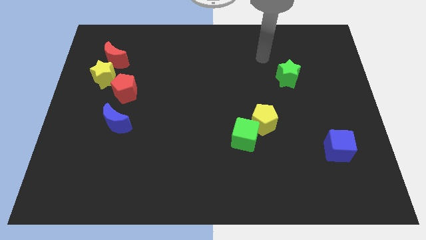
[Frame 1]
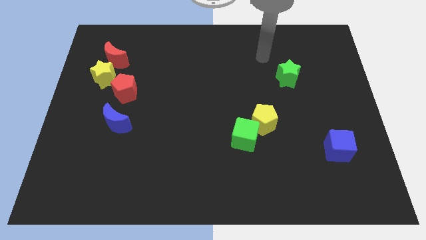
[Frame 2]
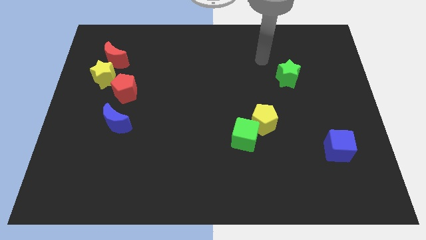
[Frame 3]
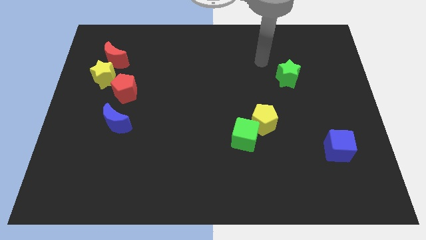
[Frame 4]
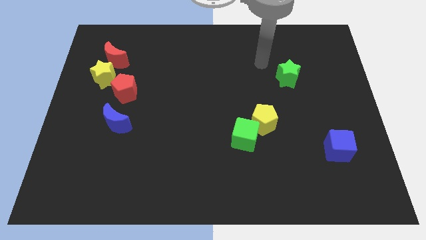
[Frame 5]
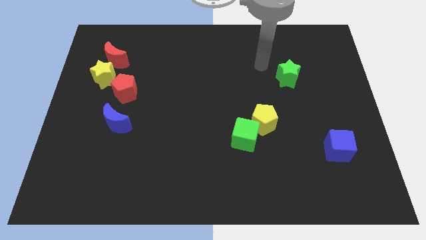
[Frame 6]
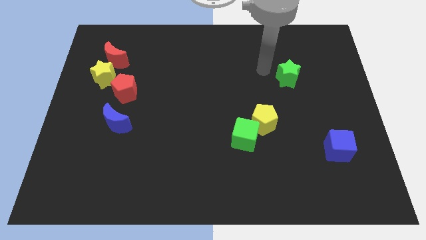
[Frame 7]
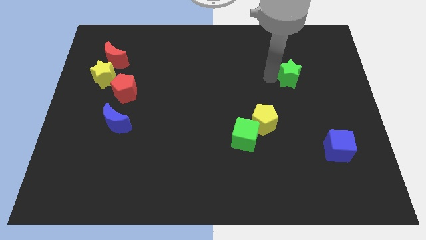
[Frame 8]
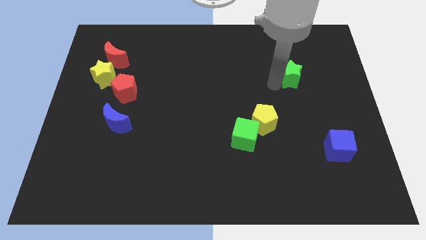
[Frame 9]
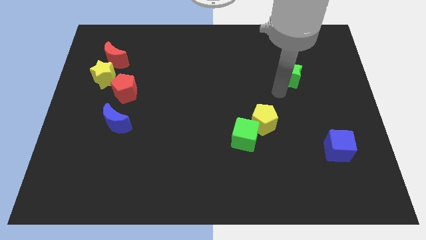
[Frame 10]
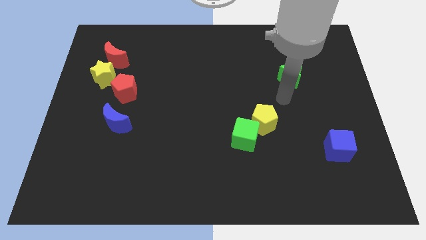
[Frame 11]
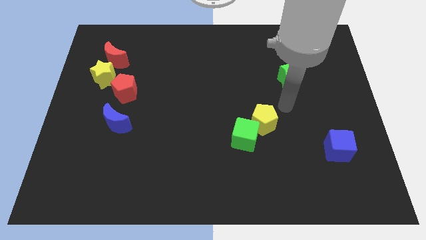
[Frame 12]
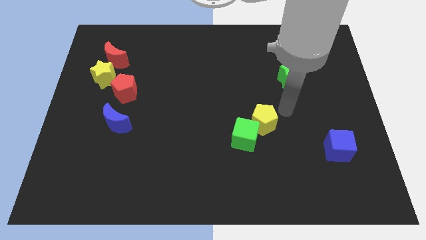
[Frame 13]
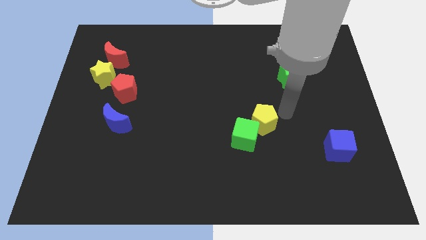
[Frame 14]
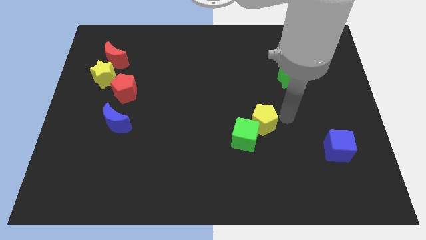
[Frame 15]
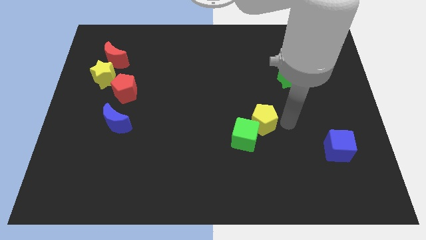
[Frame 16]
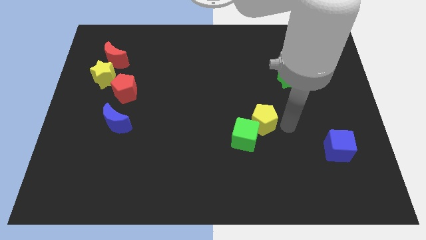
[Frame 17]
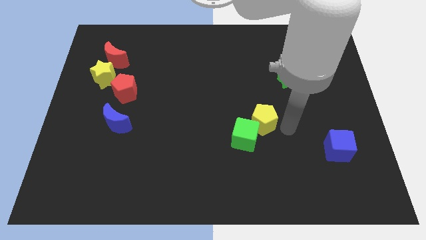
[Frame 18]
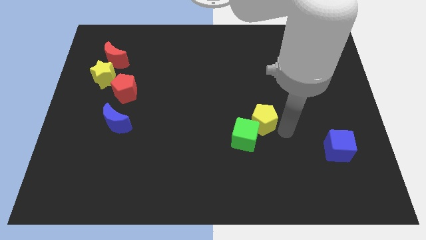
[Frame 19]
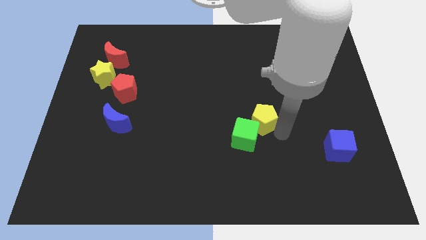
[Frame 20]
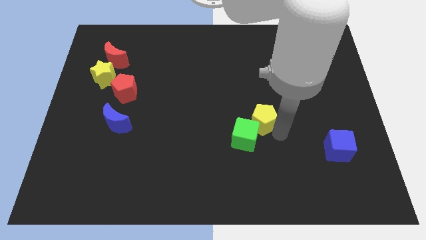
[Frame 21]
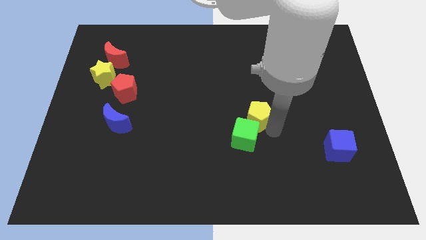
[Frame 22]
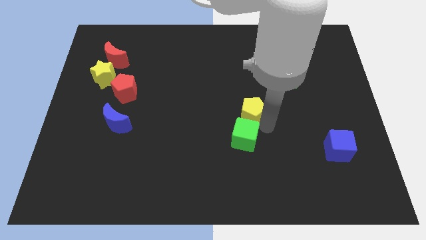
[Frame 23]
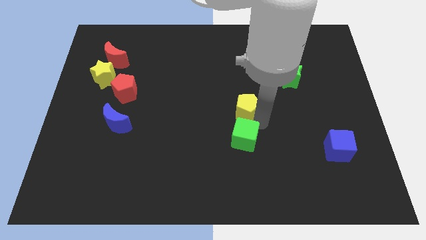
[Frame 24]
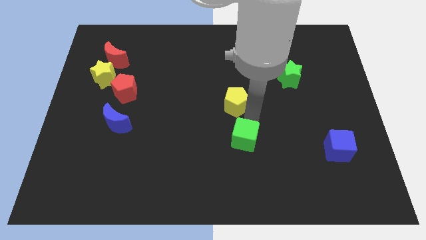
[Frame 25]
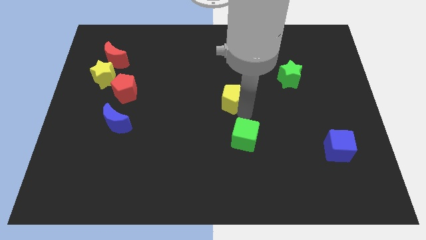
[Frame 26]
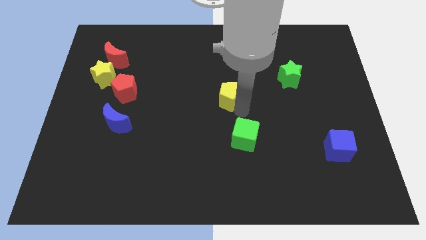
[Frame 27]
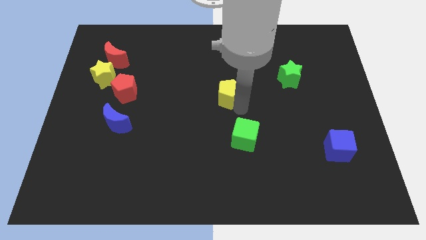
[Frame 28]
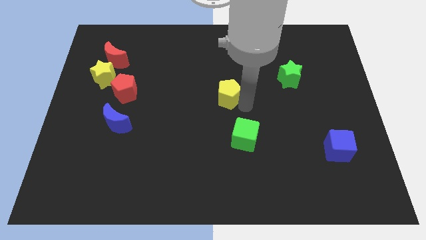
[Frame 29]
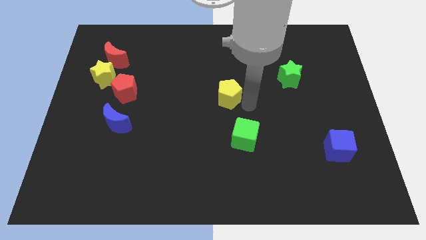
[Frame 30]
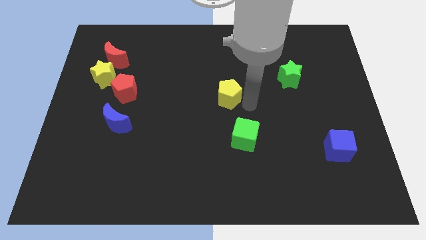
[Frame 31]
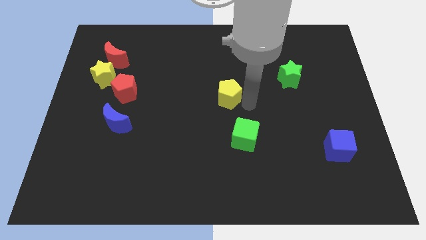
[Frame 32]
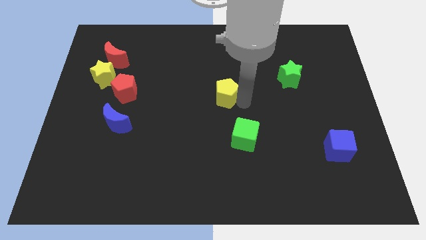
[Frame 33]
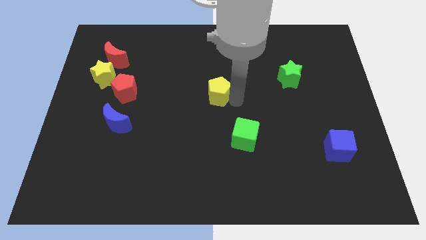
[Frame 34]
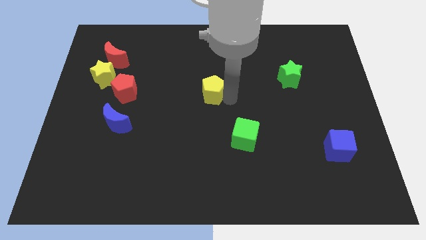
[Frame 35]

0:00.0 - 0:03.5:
push the yellow pentagon to the center of the board

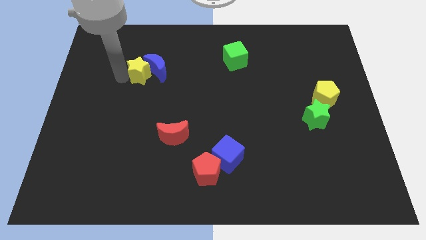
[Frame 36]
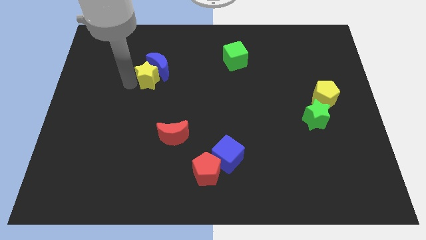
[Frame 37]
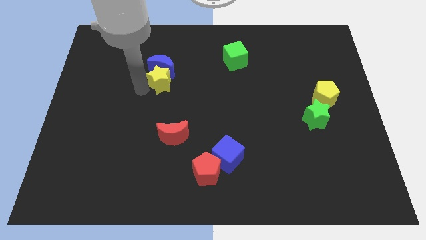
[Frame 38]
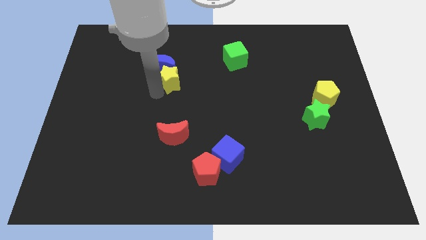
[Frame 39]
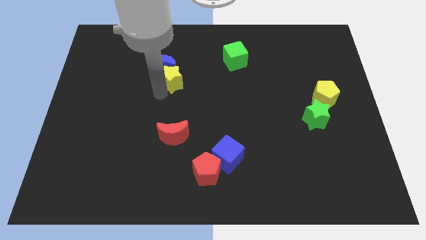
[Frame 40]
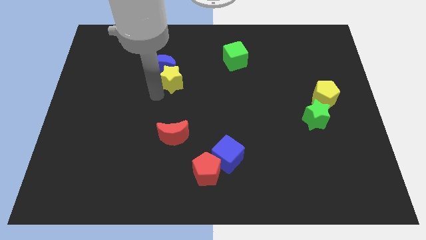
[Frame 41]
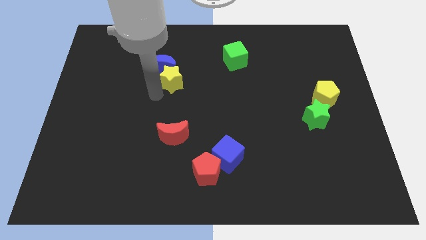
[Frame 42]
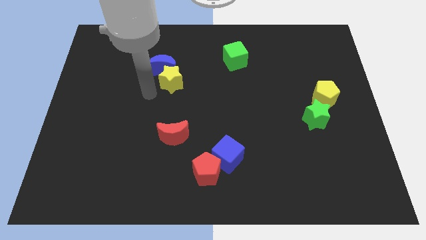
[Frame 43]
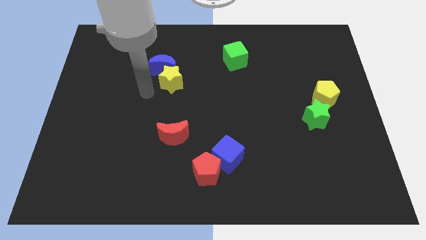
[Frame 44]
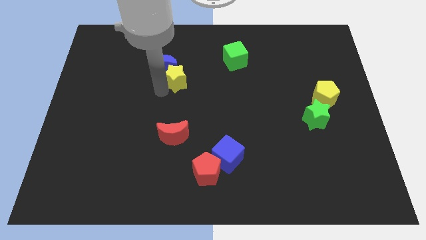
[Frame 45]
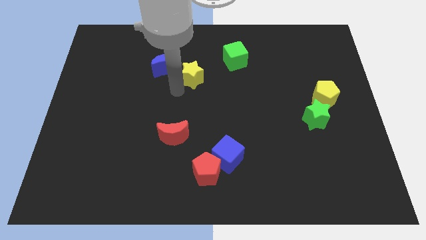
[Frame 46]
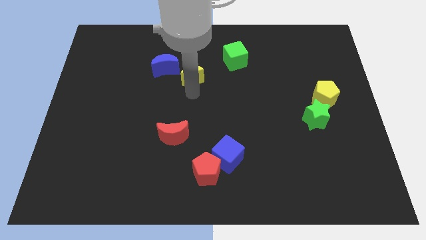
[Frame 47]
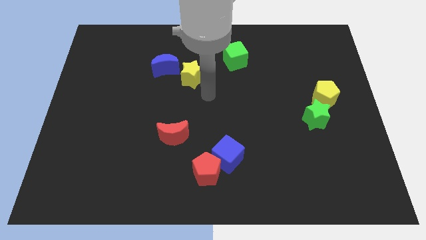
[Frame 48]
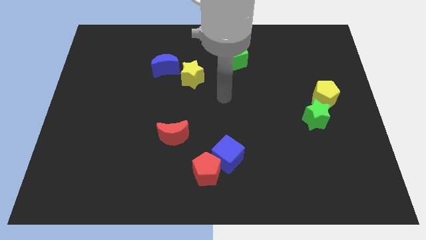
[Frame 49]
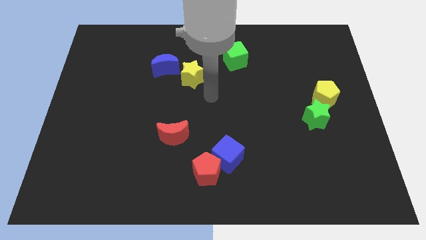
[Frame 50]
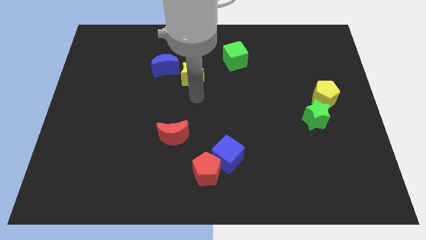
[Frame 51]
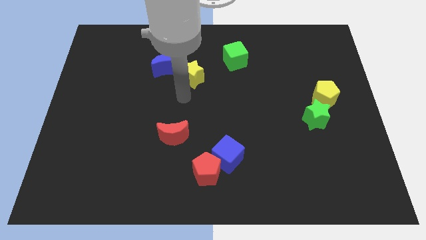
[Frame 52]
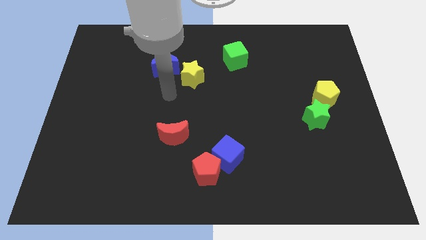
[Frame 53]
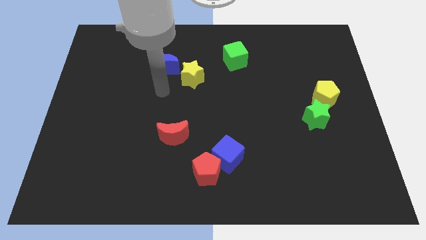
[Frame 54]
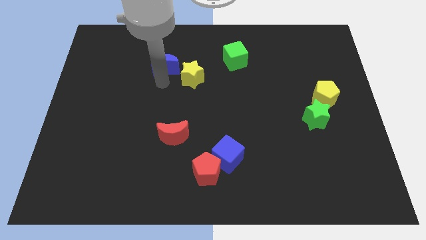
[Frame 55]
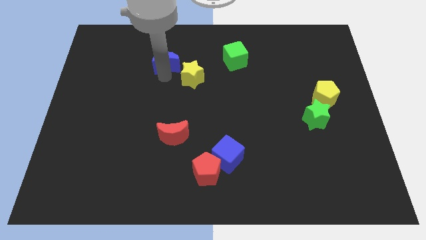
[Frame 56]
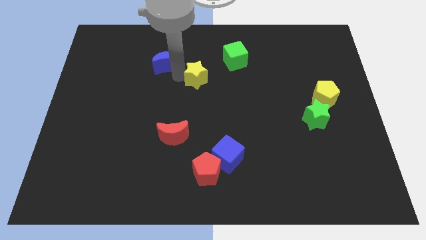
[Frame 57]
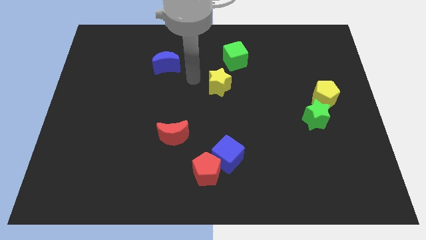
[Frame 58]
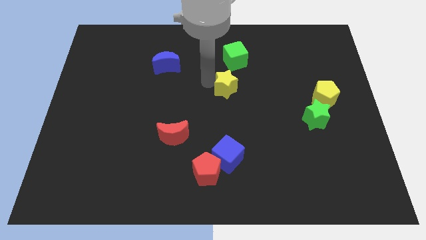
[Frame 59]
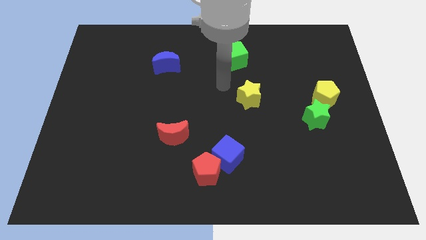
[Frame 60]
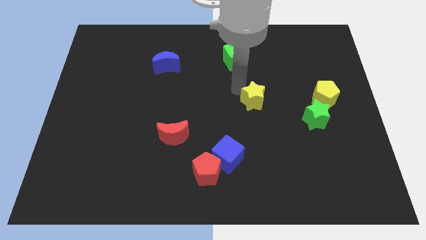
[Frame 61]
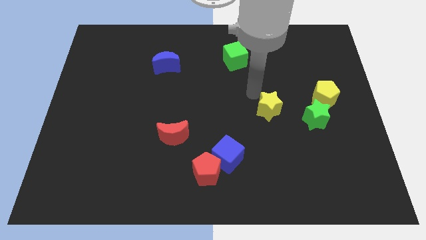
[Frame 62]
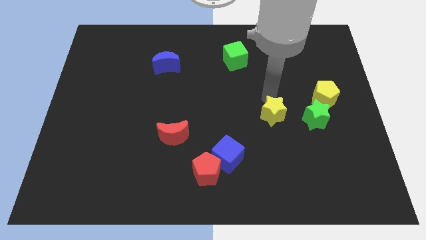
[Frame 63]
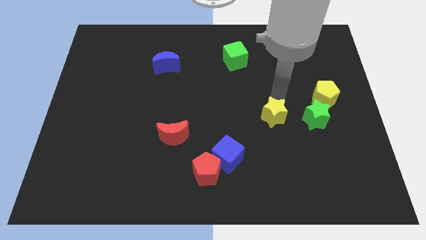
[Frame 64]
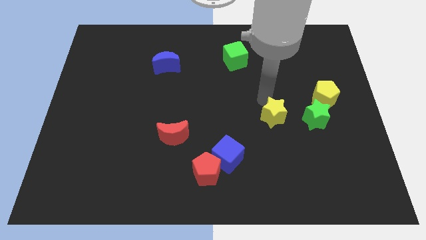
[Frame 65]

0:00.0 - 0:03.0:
place the yellow star to the left of the green star

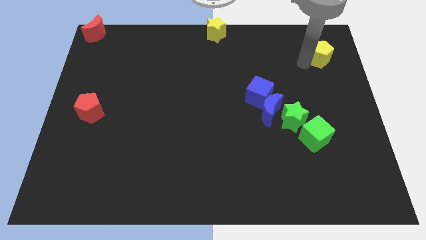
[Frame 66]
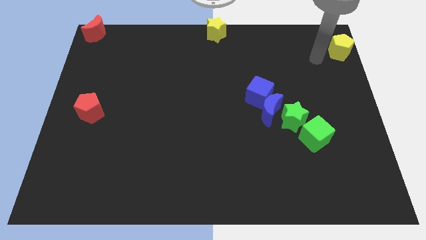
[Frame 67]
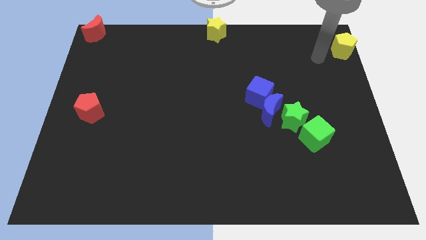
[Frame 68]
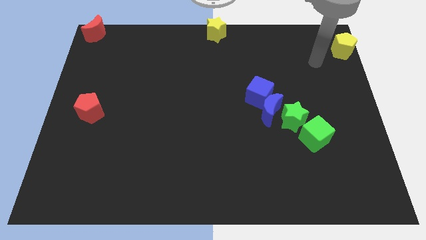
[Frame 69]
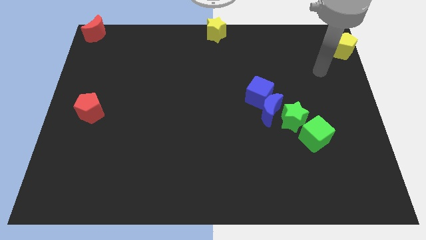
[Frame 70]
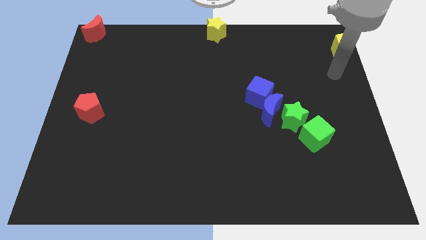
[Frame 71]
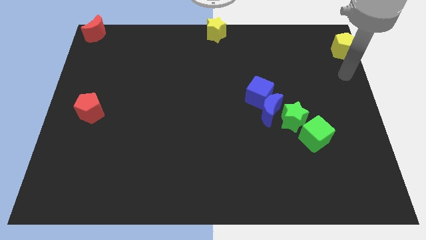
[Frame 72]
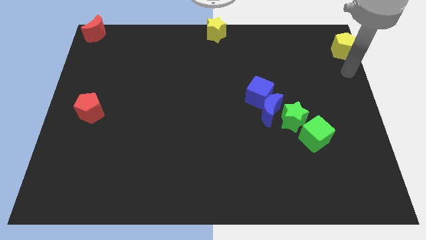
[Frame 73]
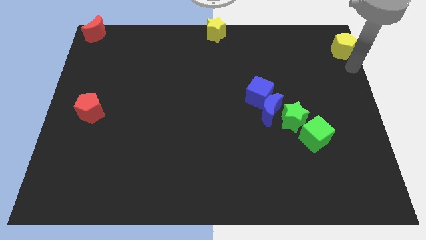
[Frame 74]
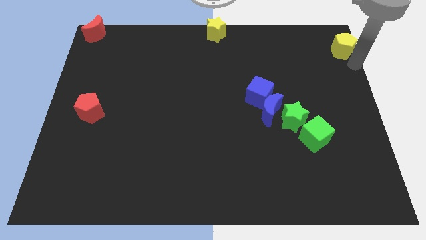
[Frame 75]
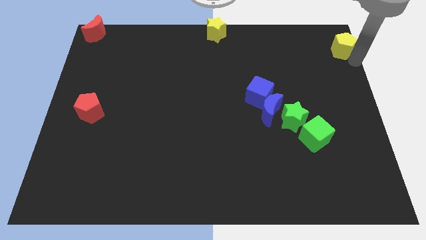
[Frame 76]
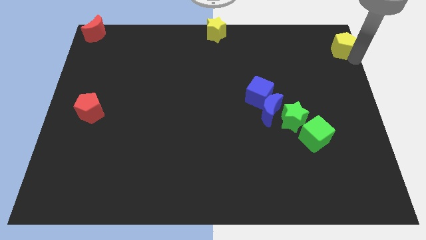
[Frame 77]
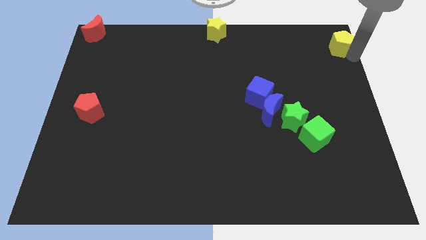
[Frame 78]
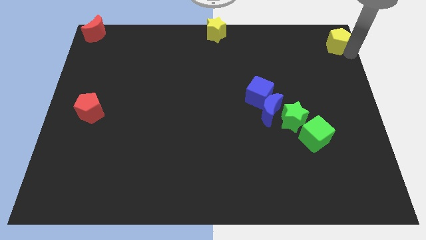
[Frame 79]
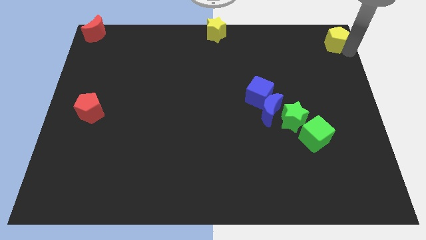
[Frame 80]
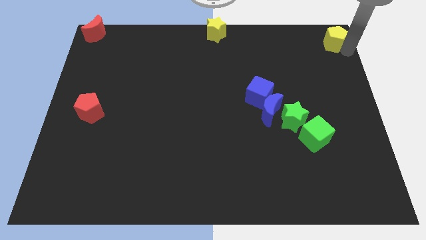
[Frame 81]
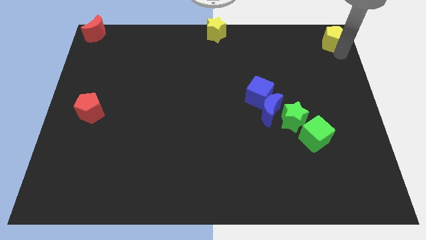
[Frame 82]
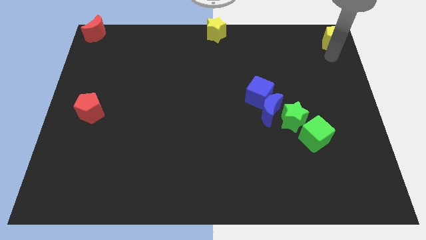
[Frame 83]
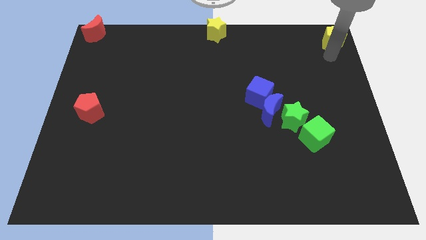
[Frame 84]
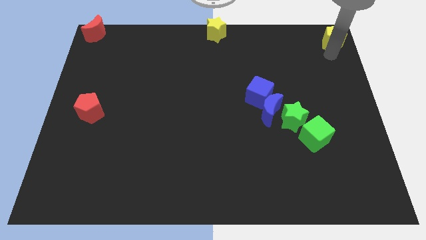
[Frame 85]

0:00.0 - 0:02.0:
push the yellow pentagon to the top right of the board

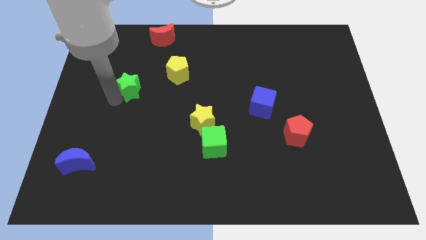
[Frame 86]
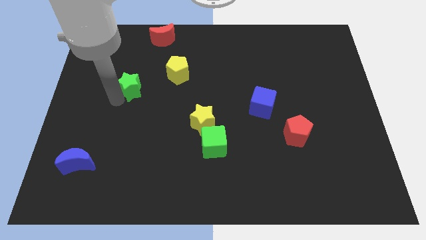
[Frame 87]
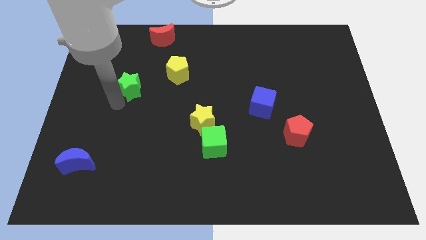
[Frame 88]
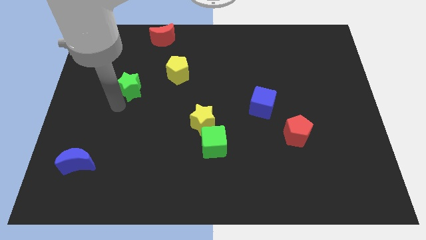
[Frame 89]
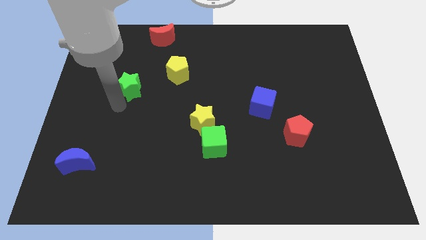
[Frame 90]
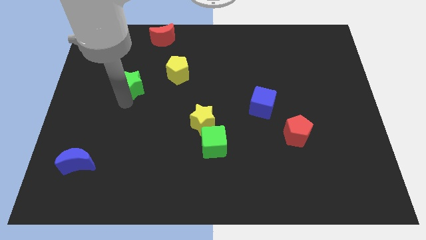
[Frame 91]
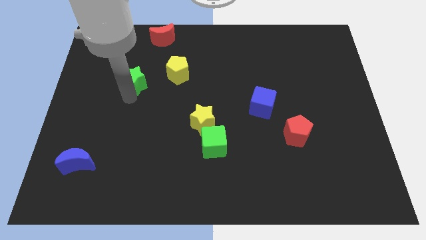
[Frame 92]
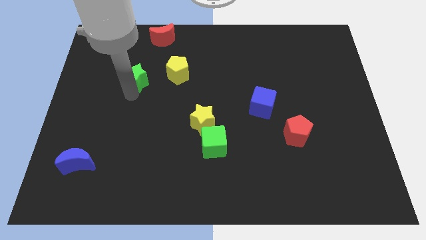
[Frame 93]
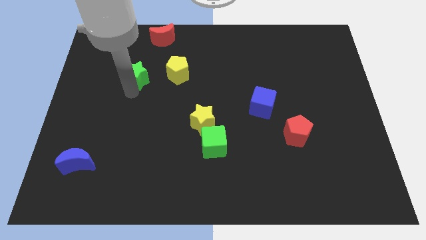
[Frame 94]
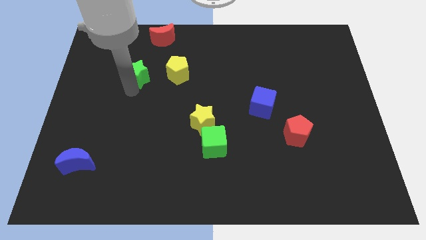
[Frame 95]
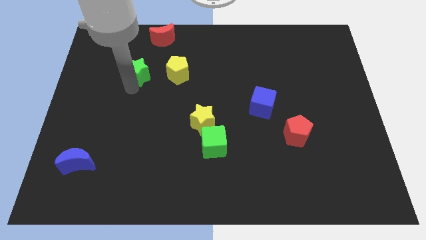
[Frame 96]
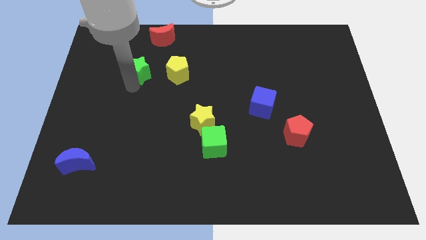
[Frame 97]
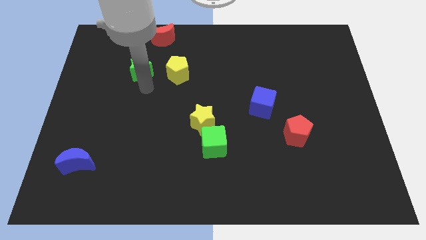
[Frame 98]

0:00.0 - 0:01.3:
place the green star parallel to the yellow pentagon
